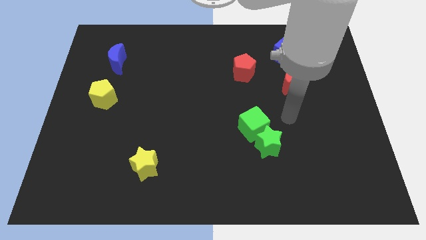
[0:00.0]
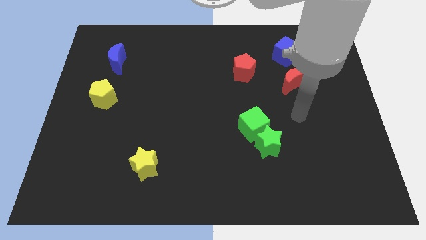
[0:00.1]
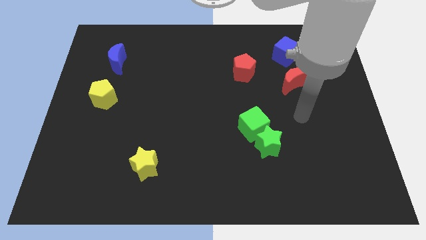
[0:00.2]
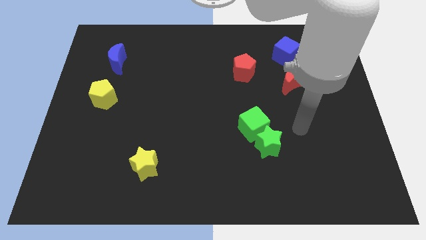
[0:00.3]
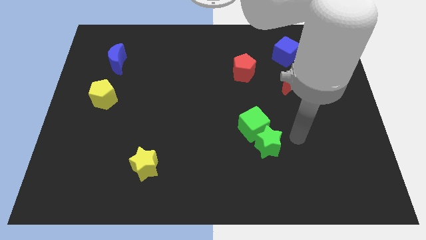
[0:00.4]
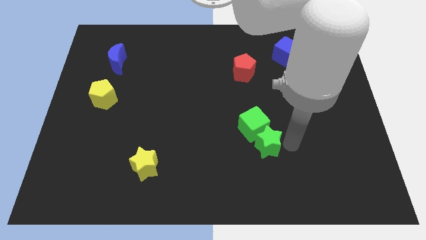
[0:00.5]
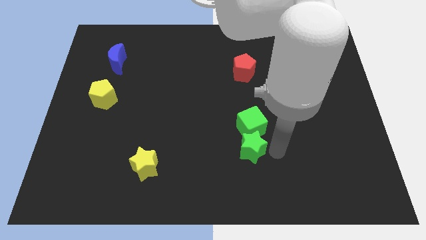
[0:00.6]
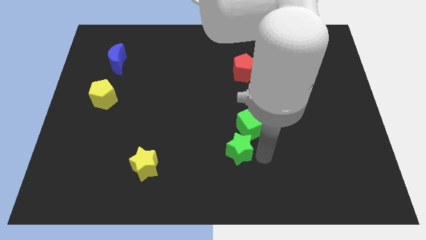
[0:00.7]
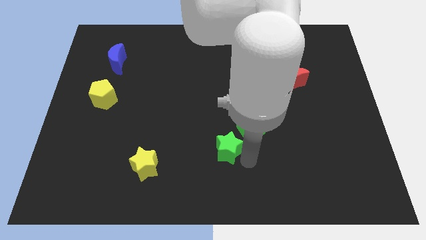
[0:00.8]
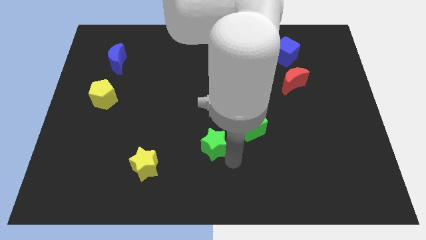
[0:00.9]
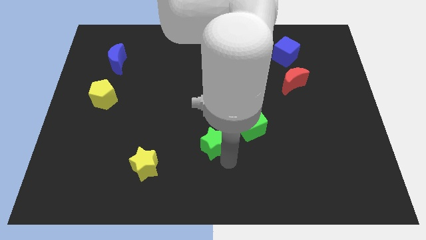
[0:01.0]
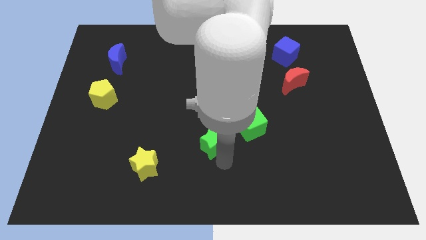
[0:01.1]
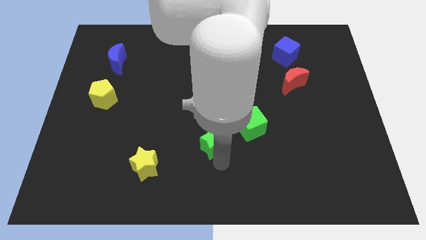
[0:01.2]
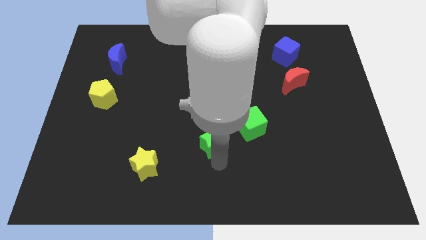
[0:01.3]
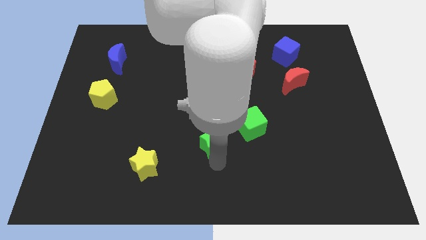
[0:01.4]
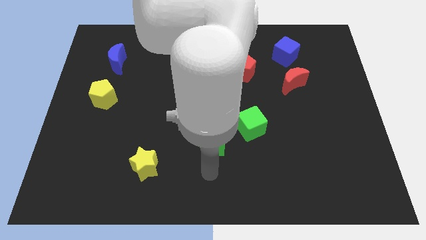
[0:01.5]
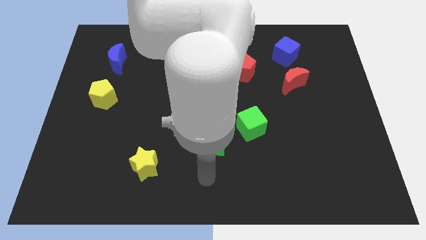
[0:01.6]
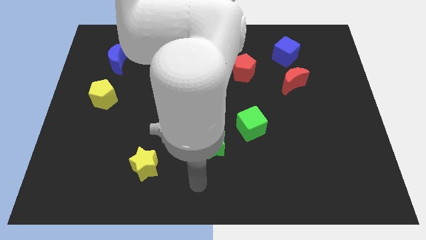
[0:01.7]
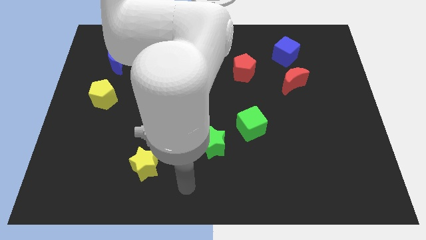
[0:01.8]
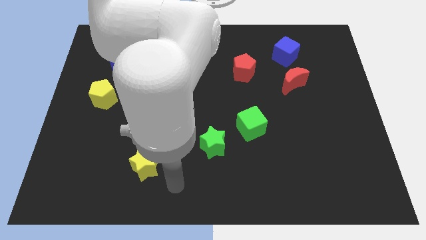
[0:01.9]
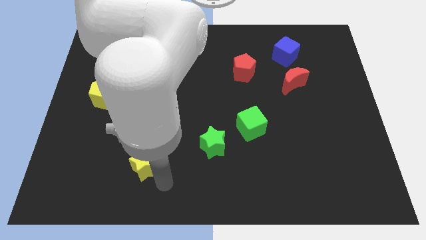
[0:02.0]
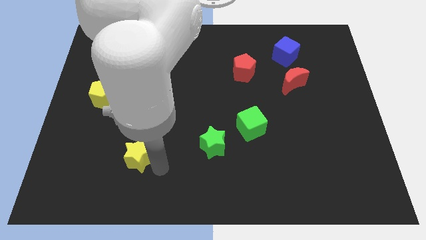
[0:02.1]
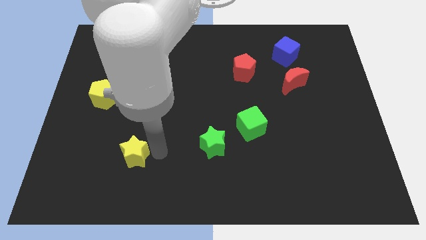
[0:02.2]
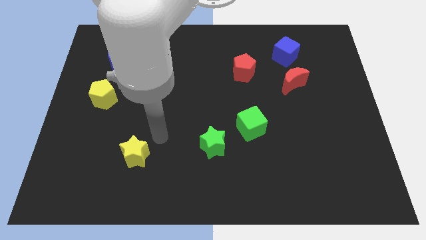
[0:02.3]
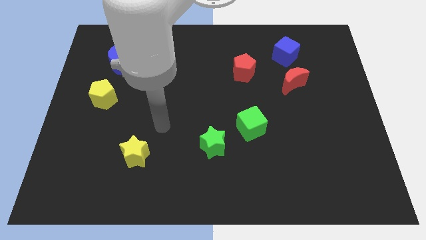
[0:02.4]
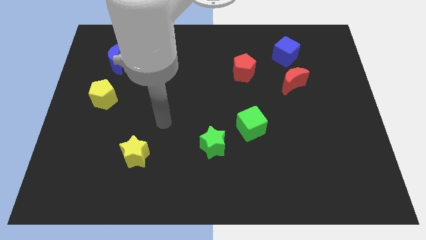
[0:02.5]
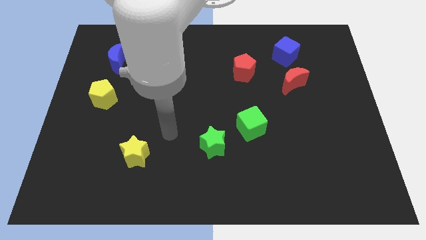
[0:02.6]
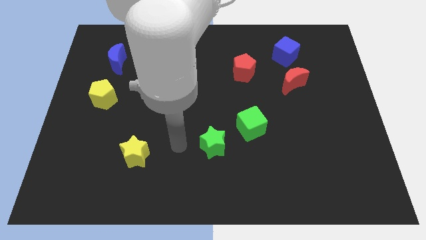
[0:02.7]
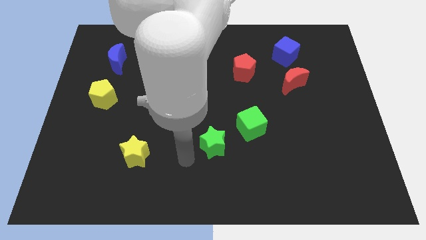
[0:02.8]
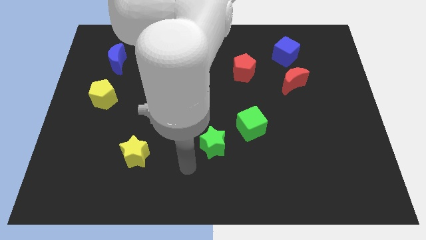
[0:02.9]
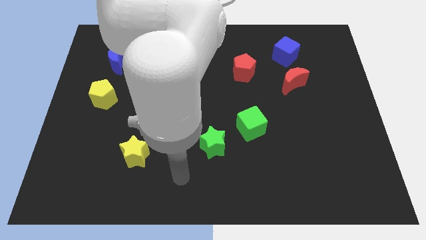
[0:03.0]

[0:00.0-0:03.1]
separate green star from the green cube

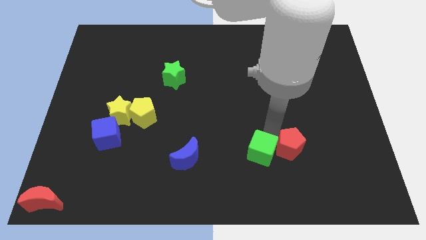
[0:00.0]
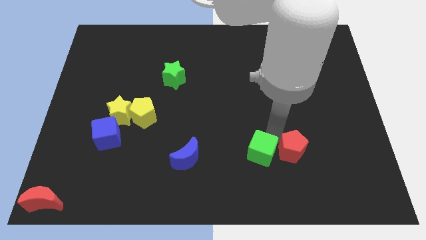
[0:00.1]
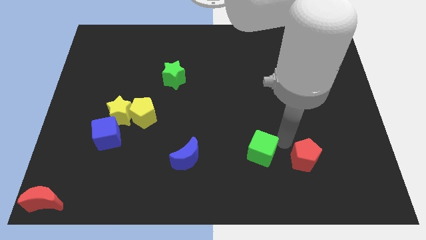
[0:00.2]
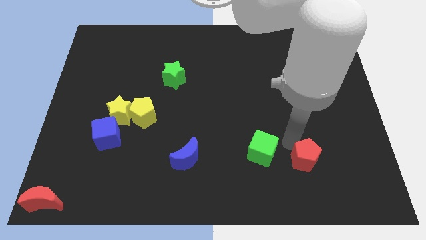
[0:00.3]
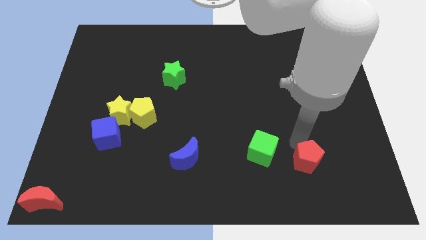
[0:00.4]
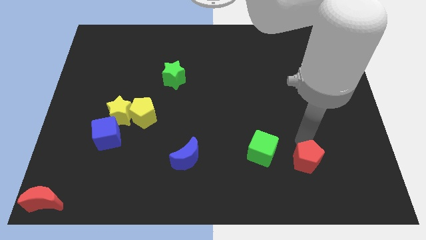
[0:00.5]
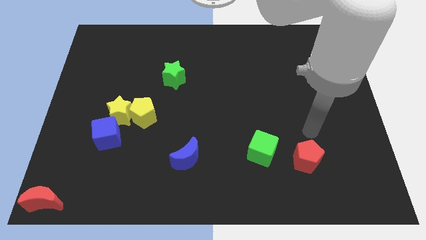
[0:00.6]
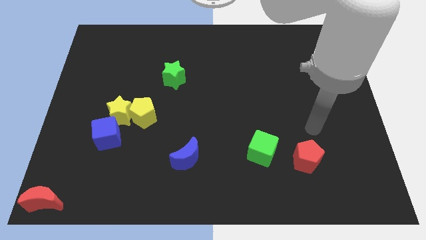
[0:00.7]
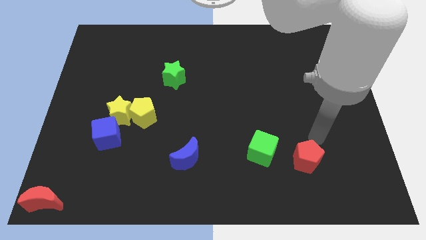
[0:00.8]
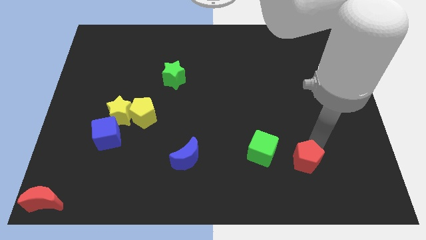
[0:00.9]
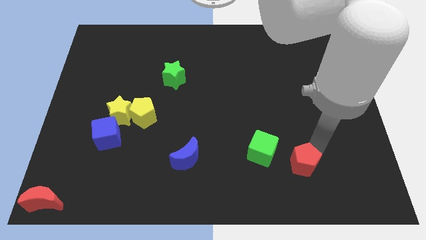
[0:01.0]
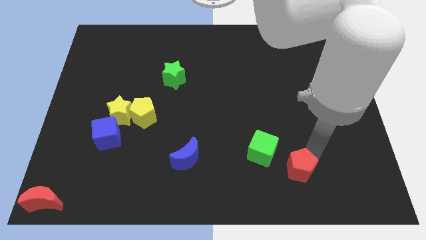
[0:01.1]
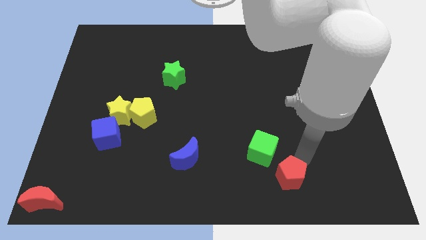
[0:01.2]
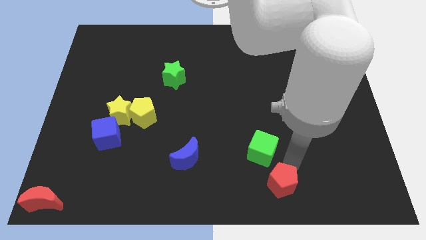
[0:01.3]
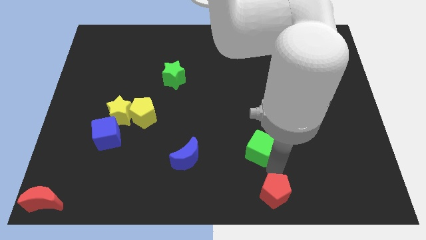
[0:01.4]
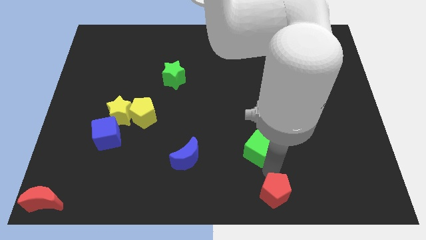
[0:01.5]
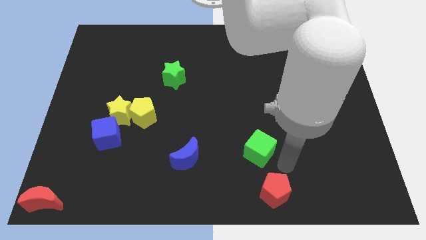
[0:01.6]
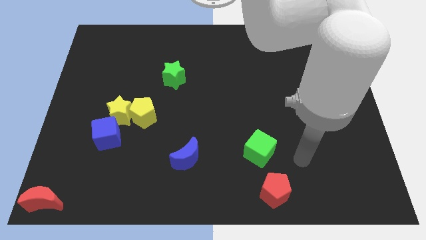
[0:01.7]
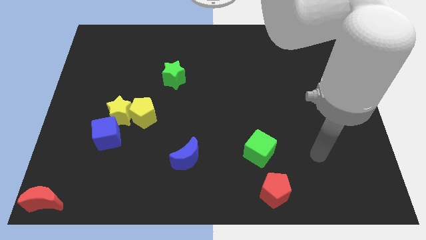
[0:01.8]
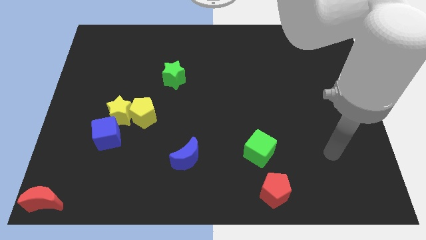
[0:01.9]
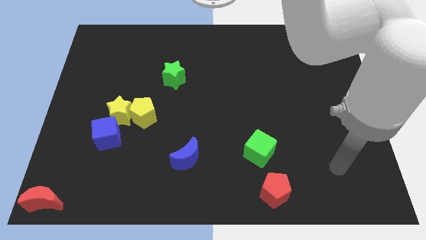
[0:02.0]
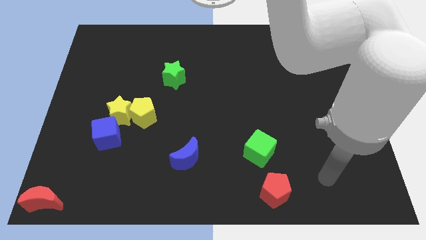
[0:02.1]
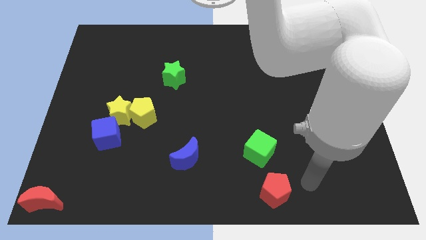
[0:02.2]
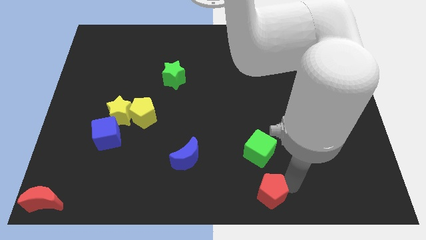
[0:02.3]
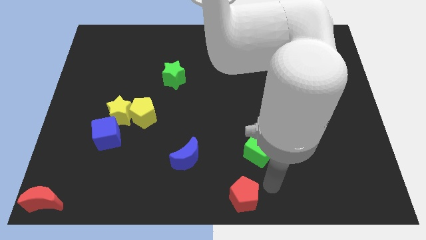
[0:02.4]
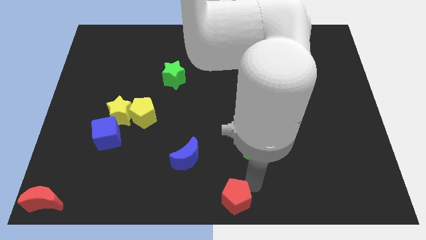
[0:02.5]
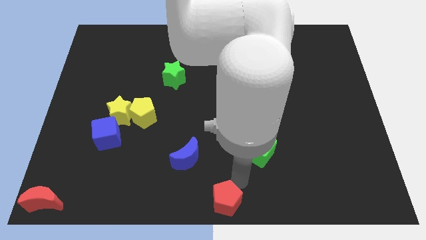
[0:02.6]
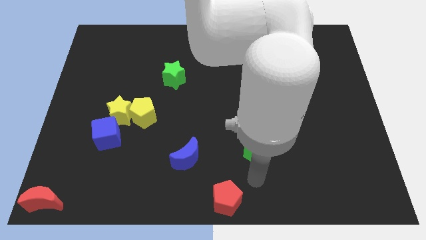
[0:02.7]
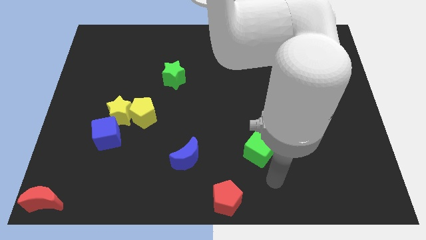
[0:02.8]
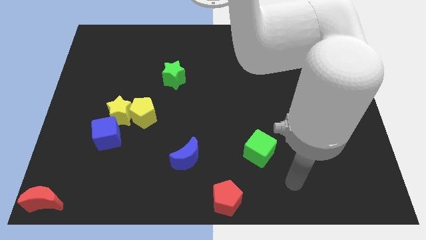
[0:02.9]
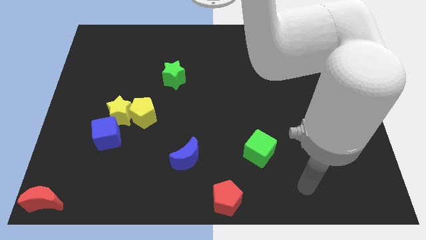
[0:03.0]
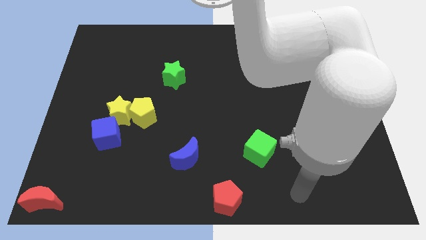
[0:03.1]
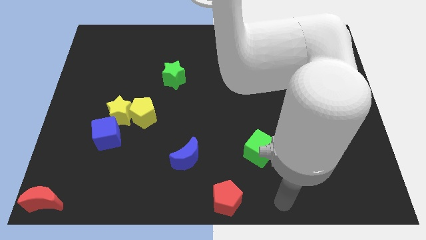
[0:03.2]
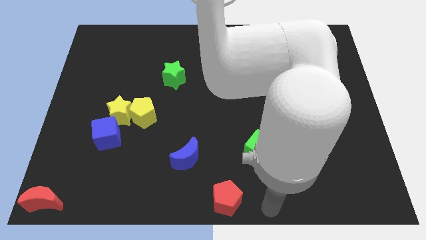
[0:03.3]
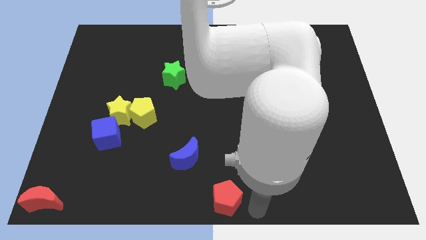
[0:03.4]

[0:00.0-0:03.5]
place the red oentagon diagonally to the rigt of the blue moon

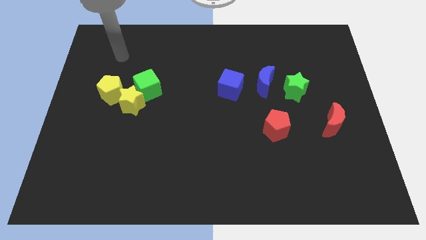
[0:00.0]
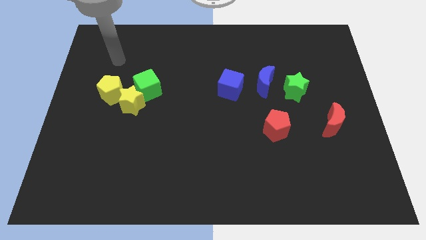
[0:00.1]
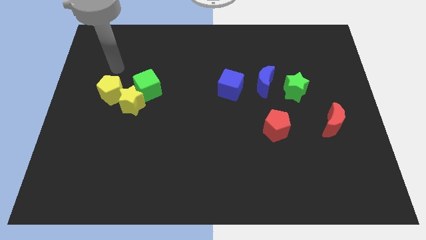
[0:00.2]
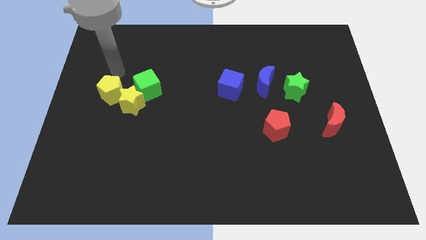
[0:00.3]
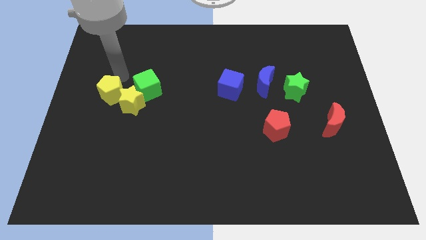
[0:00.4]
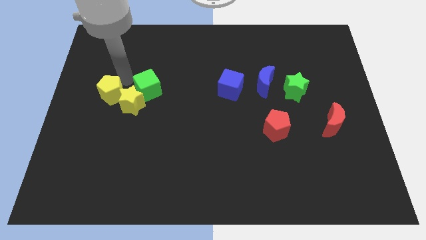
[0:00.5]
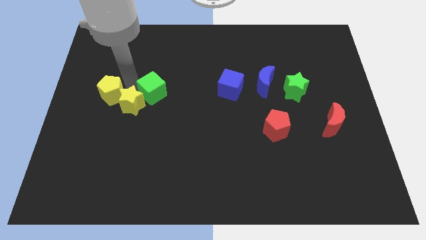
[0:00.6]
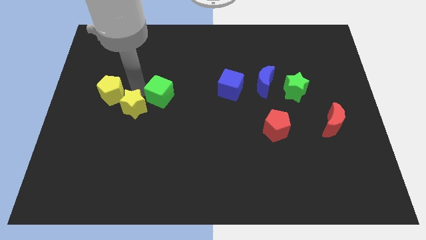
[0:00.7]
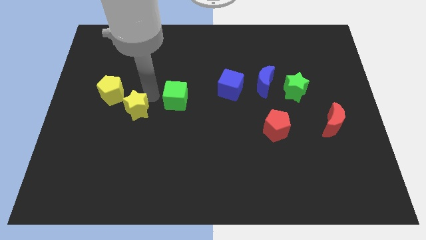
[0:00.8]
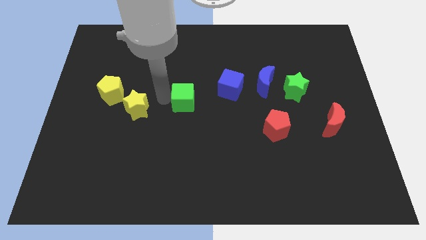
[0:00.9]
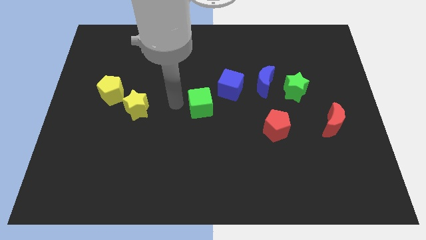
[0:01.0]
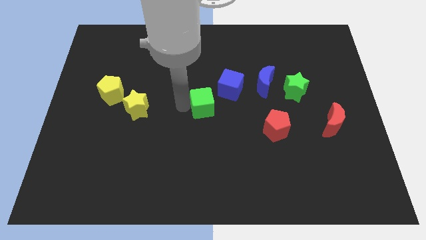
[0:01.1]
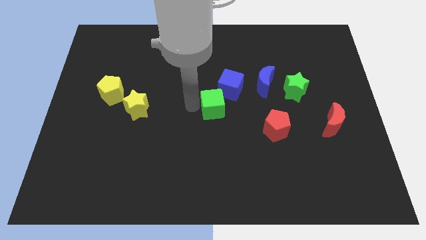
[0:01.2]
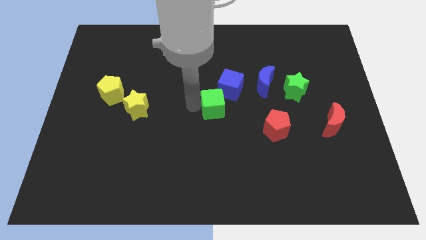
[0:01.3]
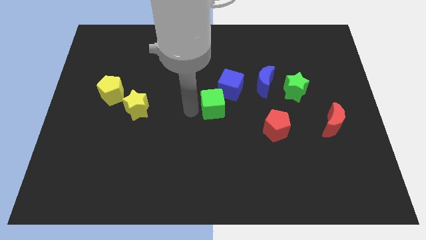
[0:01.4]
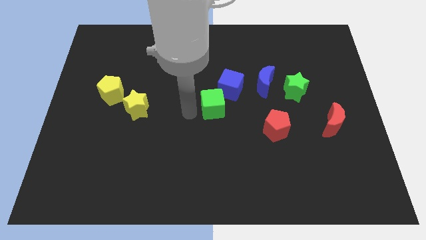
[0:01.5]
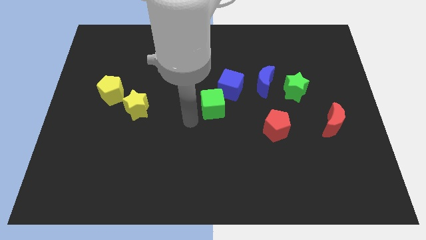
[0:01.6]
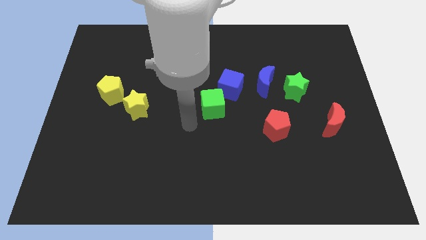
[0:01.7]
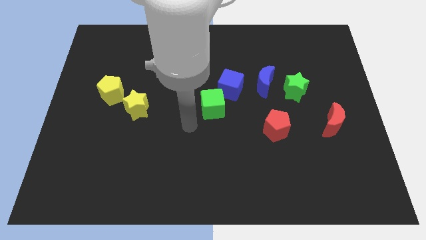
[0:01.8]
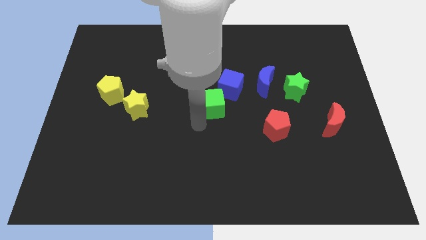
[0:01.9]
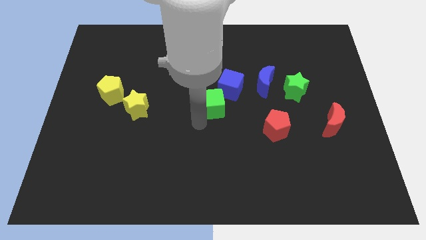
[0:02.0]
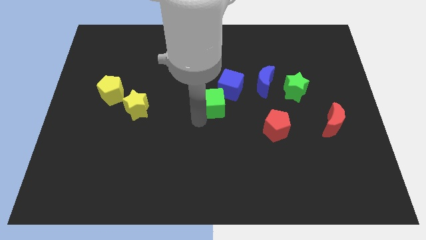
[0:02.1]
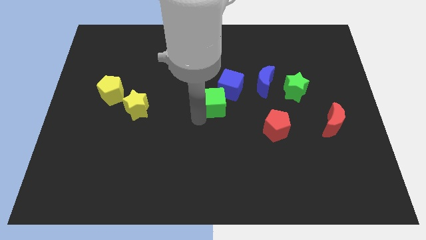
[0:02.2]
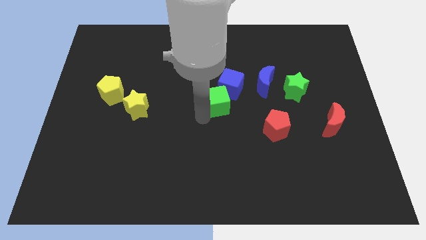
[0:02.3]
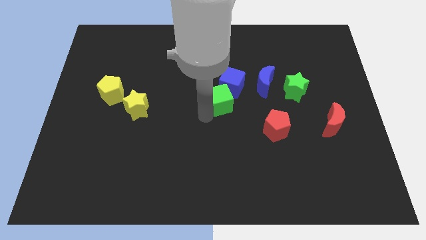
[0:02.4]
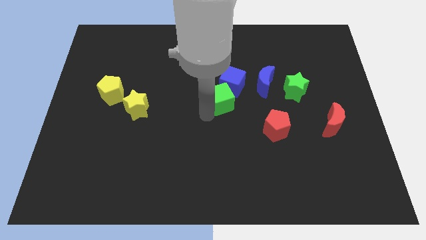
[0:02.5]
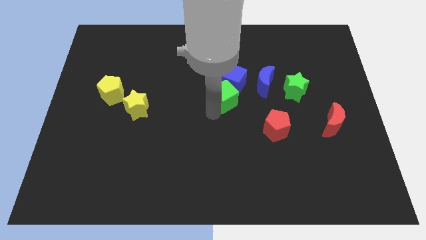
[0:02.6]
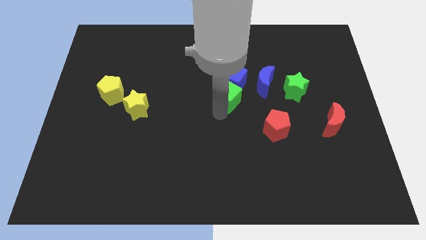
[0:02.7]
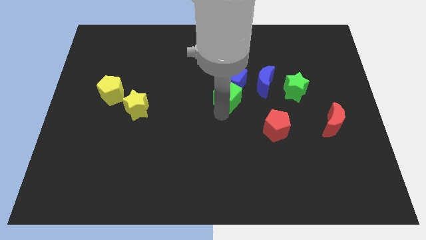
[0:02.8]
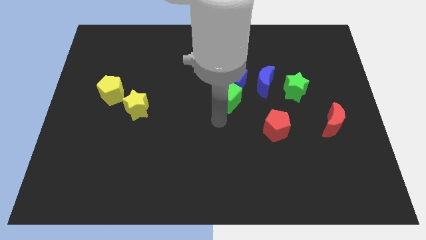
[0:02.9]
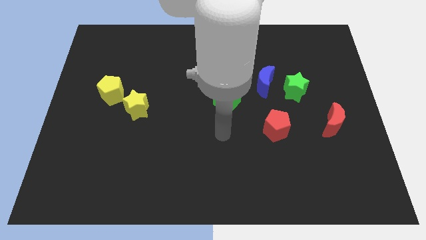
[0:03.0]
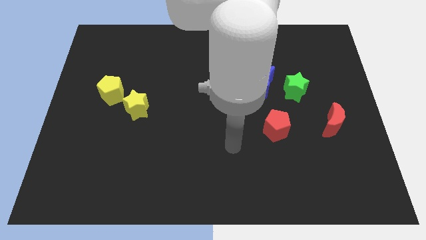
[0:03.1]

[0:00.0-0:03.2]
separate the green cube away yellow star
